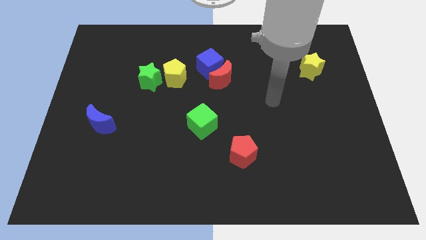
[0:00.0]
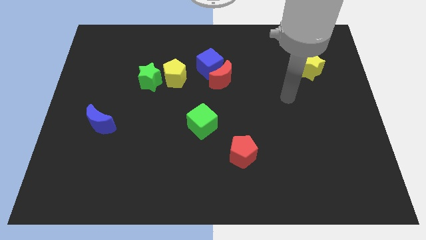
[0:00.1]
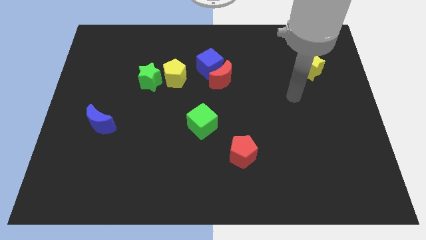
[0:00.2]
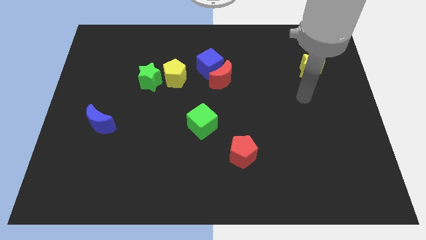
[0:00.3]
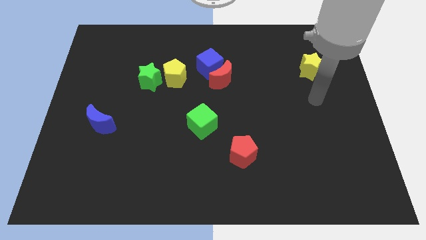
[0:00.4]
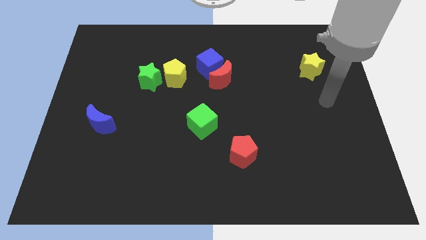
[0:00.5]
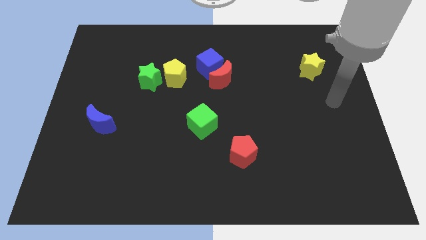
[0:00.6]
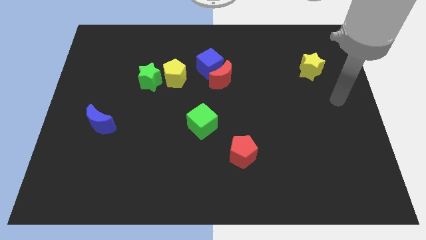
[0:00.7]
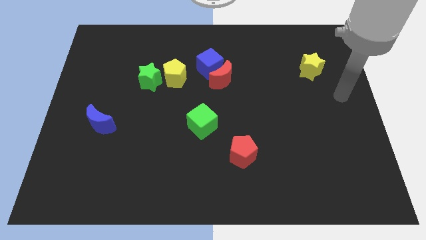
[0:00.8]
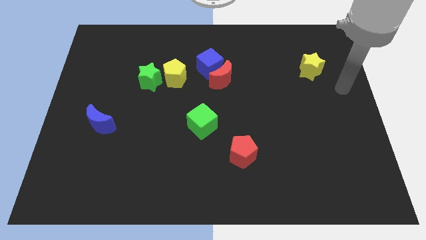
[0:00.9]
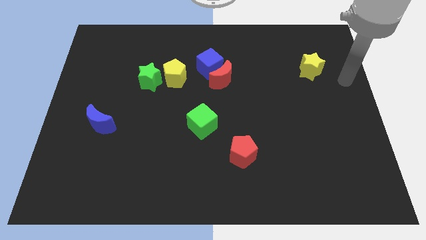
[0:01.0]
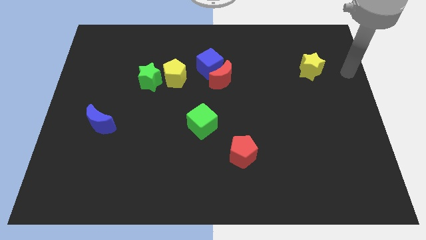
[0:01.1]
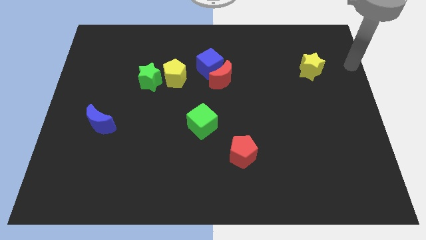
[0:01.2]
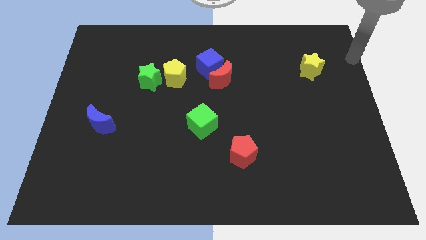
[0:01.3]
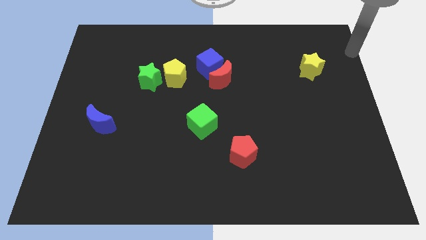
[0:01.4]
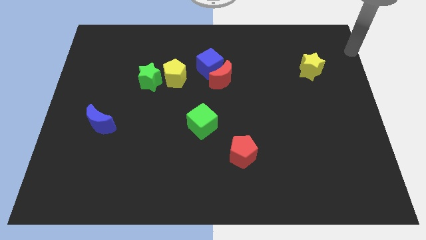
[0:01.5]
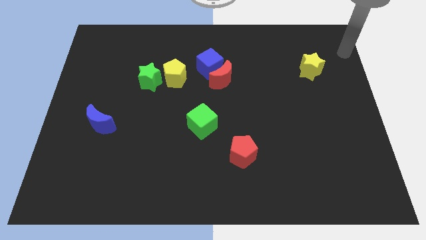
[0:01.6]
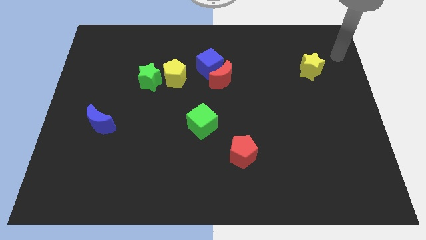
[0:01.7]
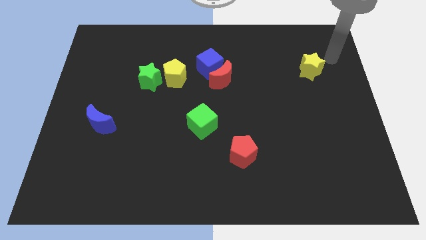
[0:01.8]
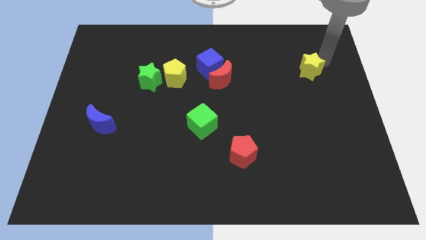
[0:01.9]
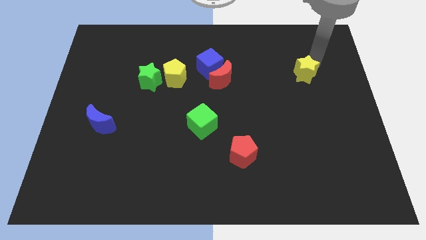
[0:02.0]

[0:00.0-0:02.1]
move your arm on top of the yellow star

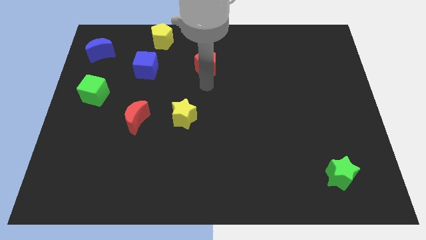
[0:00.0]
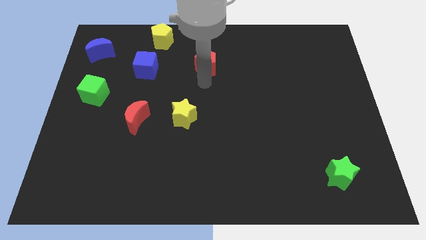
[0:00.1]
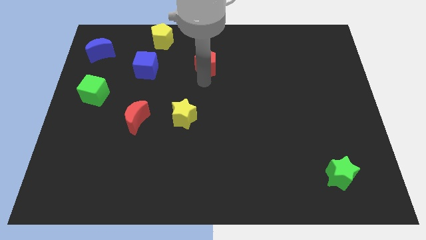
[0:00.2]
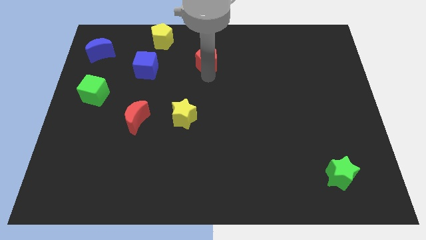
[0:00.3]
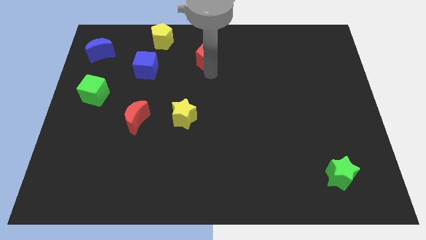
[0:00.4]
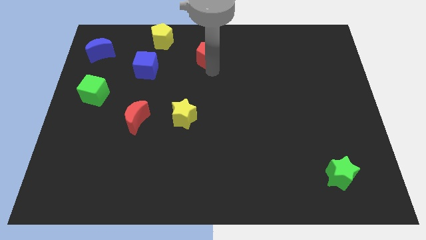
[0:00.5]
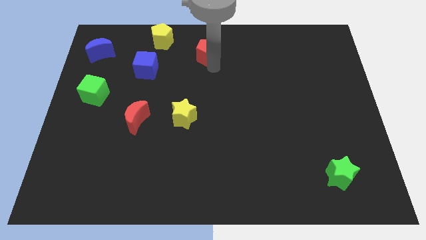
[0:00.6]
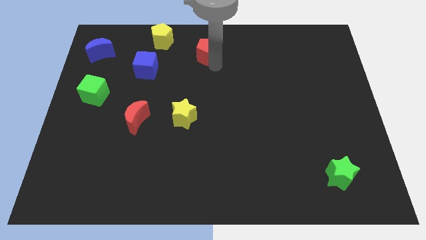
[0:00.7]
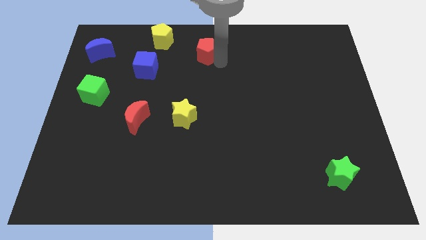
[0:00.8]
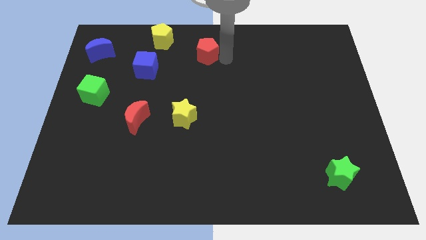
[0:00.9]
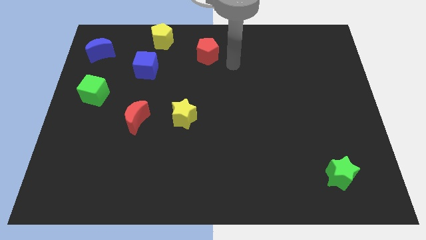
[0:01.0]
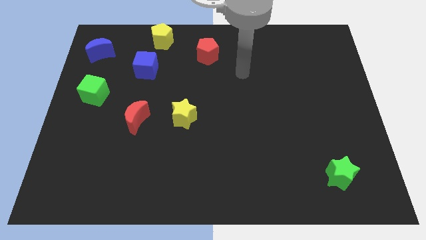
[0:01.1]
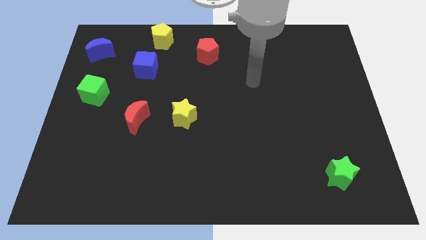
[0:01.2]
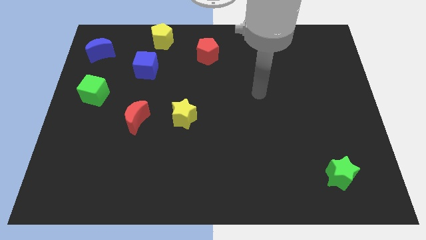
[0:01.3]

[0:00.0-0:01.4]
push the red pentagon slightly to the top of the board

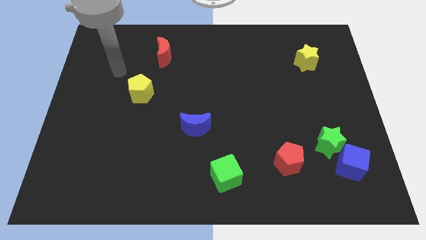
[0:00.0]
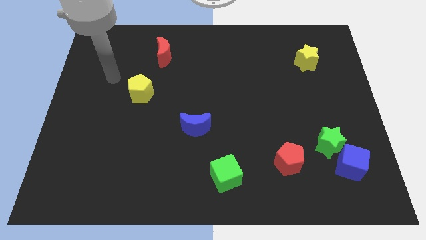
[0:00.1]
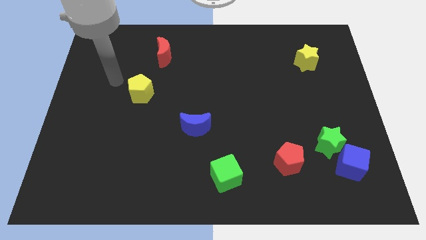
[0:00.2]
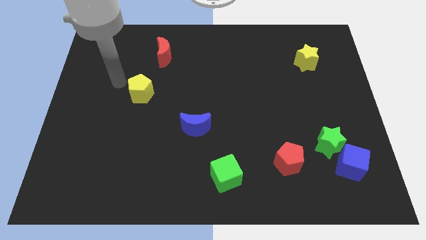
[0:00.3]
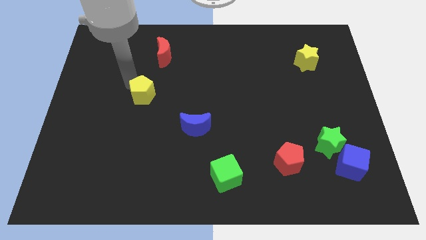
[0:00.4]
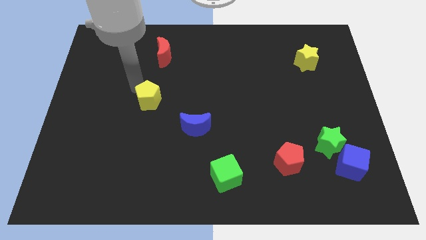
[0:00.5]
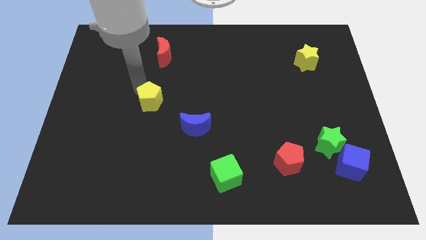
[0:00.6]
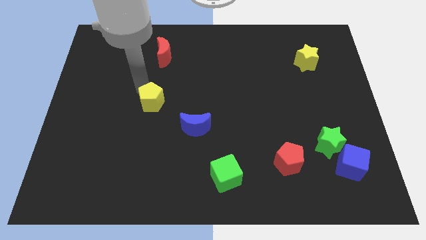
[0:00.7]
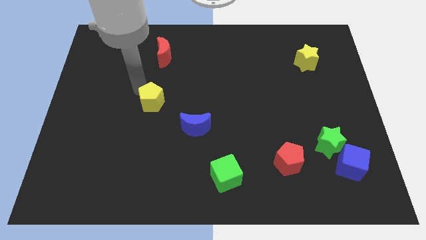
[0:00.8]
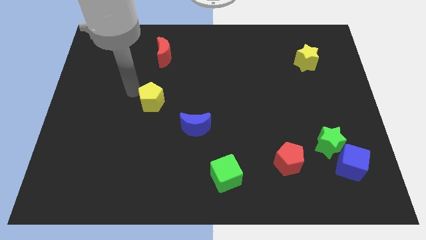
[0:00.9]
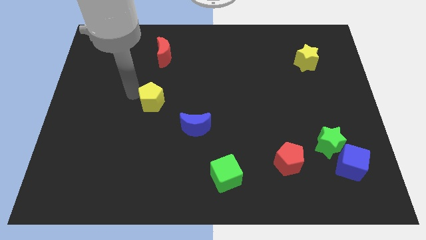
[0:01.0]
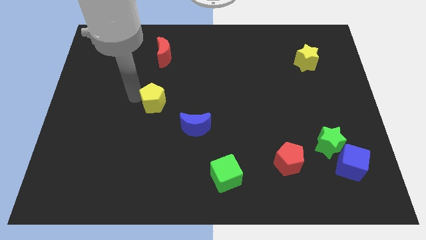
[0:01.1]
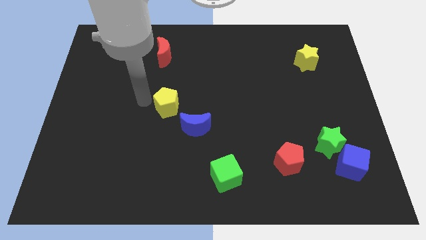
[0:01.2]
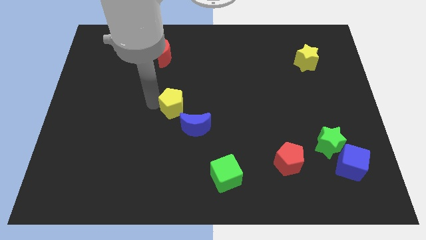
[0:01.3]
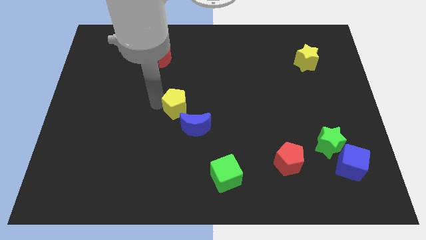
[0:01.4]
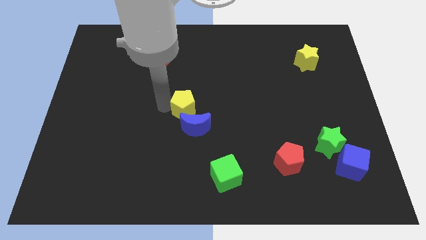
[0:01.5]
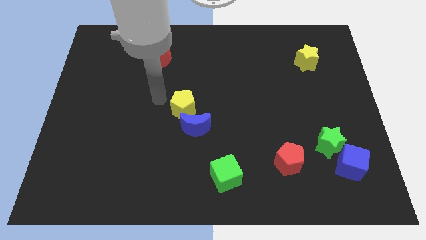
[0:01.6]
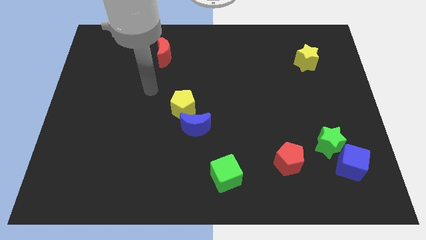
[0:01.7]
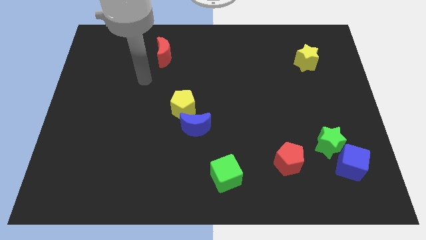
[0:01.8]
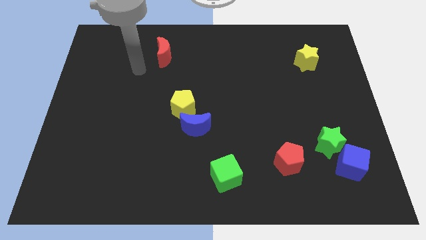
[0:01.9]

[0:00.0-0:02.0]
move the yellow pentagon above the blue moon

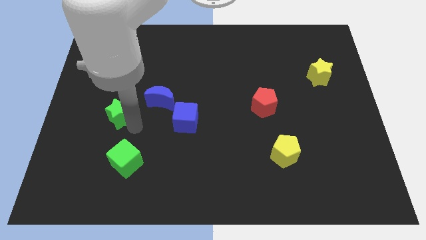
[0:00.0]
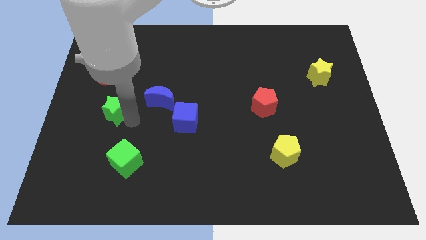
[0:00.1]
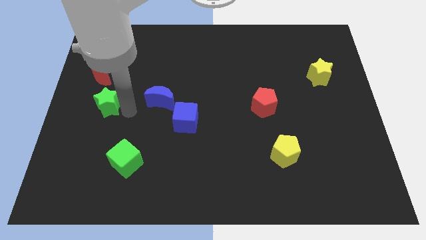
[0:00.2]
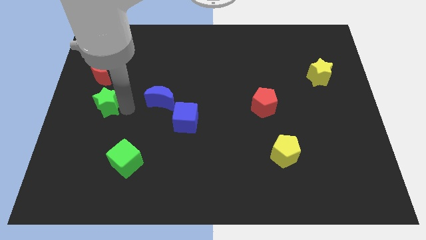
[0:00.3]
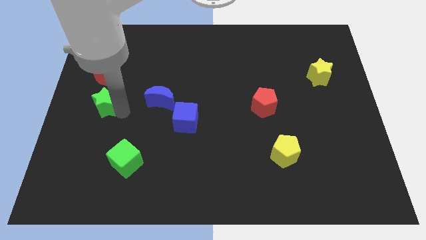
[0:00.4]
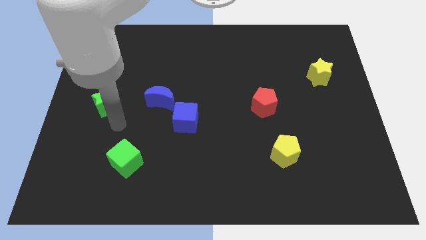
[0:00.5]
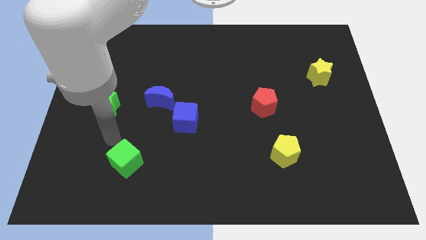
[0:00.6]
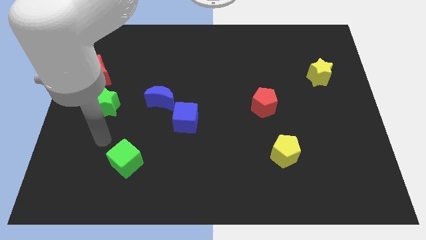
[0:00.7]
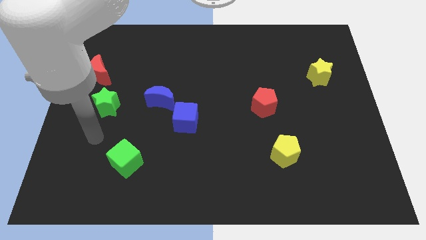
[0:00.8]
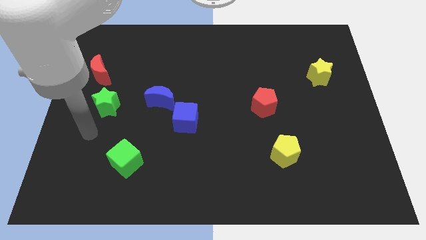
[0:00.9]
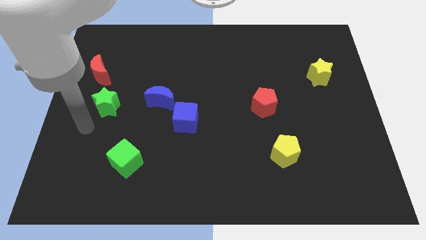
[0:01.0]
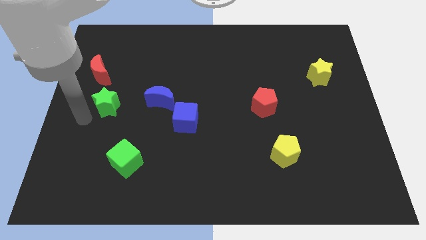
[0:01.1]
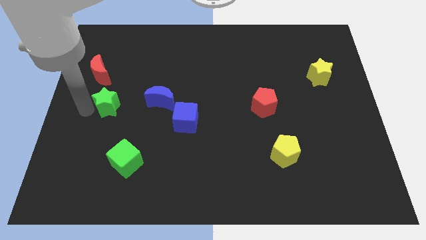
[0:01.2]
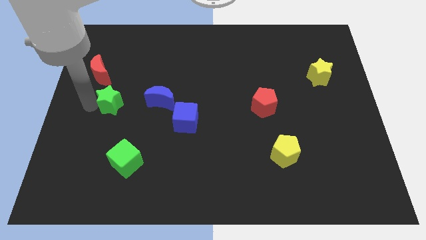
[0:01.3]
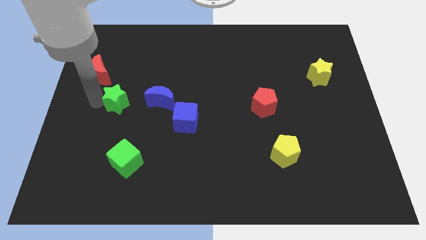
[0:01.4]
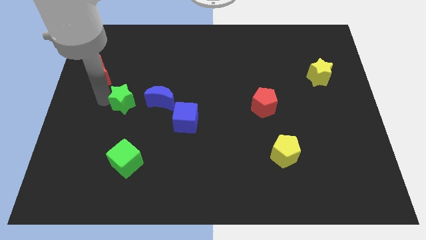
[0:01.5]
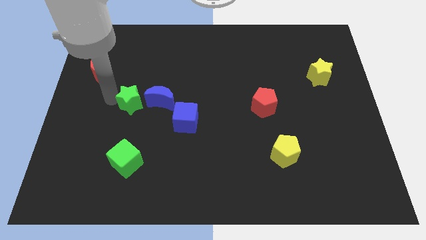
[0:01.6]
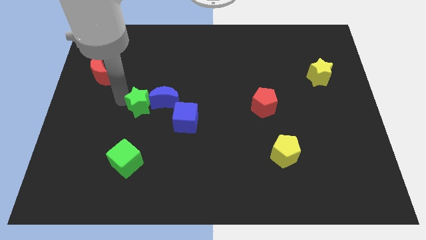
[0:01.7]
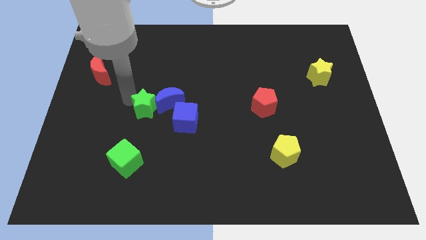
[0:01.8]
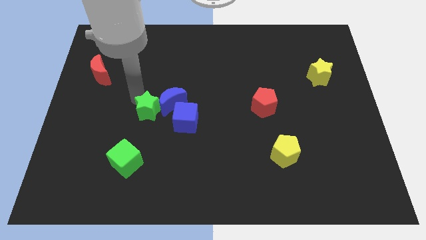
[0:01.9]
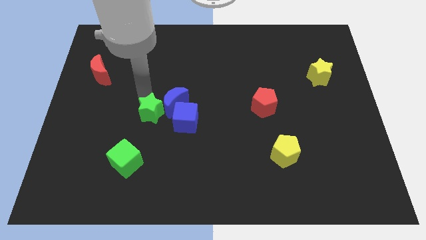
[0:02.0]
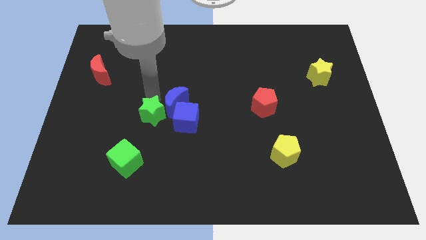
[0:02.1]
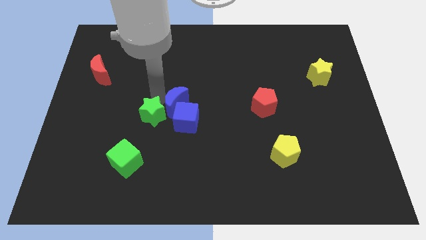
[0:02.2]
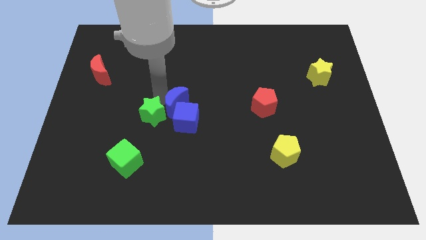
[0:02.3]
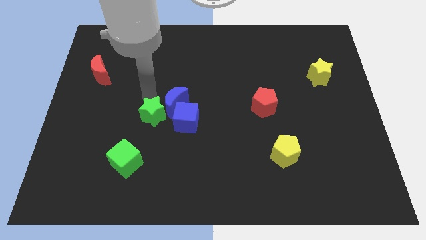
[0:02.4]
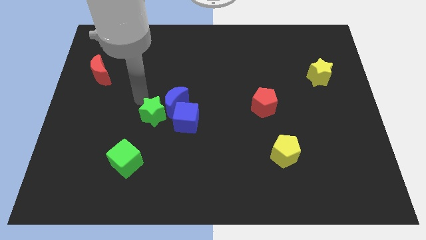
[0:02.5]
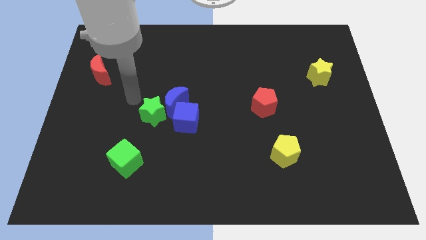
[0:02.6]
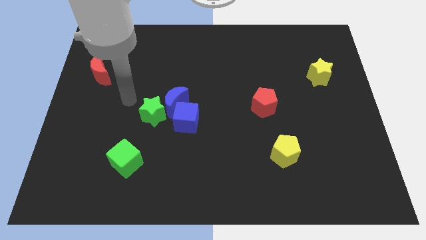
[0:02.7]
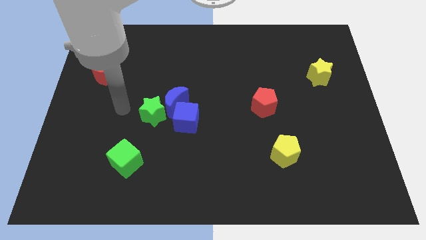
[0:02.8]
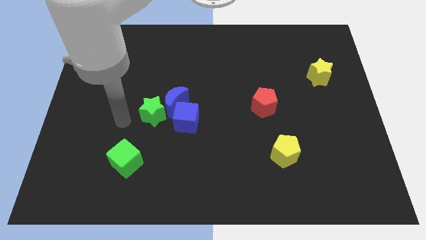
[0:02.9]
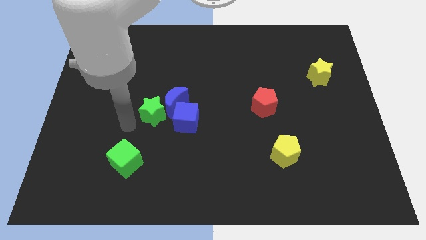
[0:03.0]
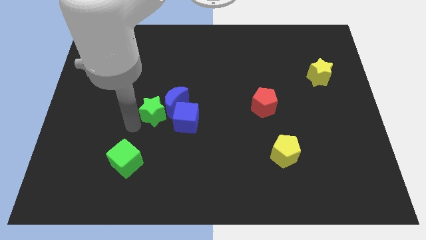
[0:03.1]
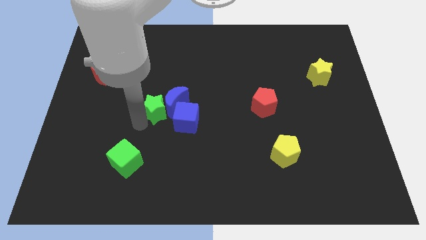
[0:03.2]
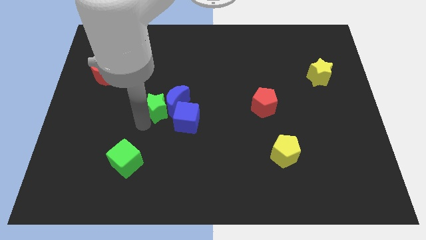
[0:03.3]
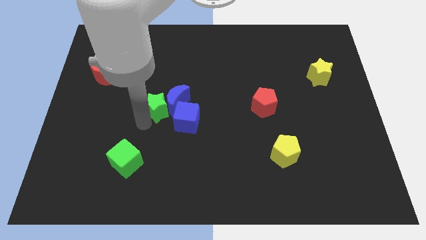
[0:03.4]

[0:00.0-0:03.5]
push the green star into blue crescent
